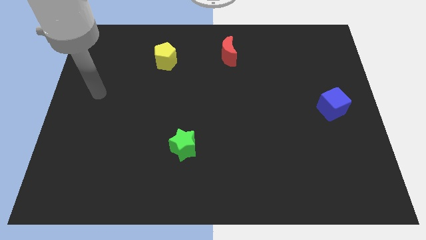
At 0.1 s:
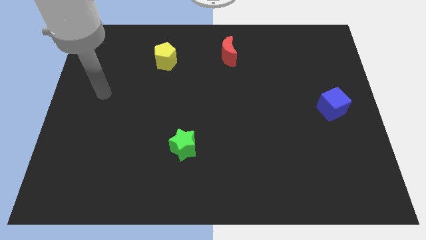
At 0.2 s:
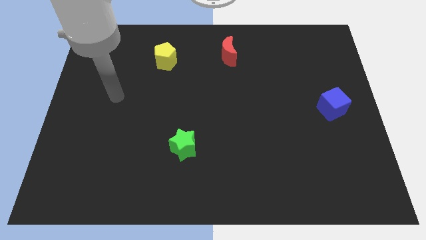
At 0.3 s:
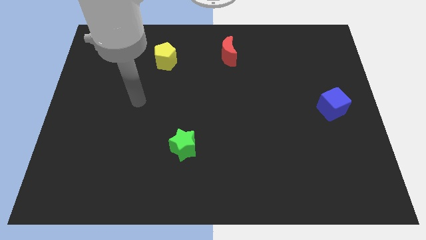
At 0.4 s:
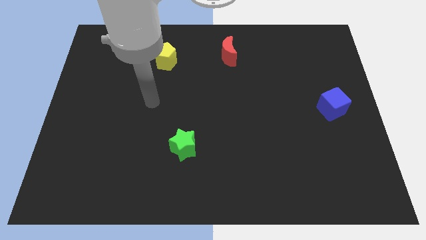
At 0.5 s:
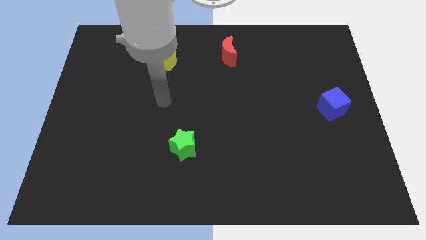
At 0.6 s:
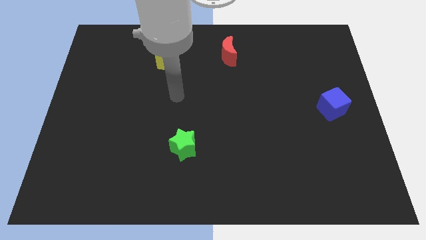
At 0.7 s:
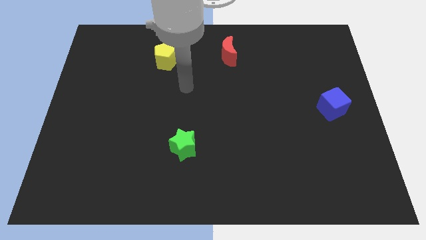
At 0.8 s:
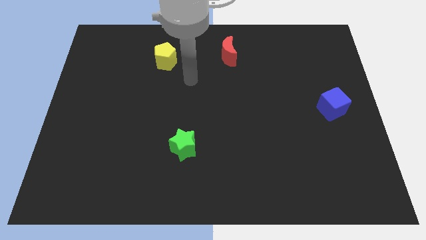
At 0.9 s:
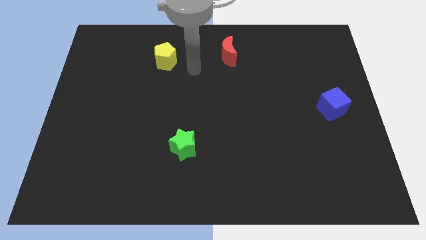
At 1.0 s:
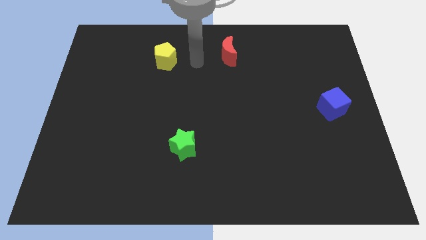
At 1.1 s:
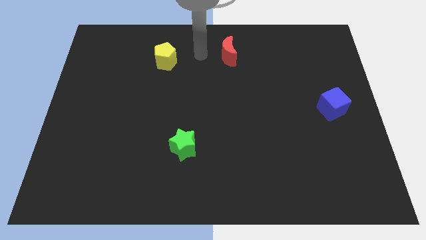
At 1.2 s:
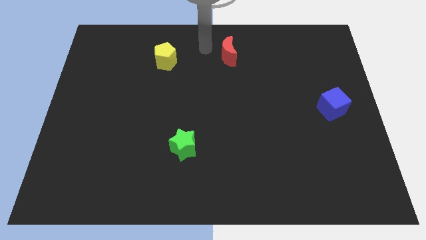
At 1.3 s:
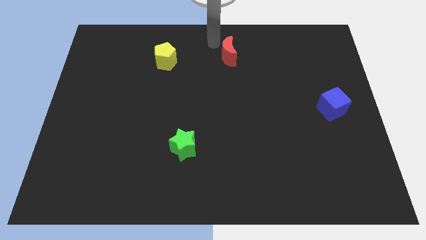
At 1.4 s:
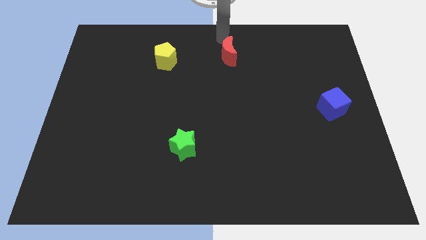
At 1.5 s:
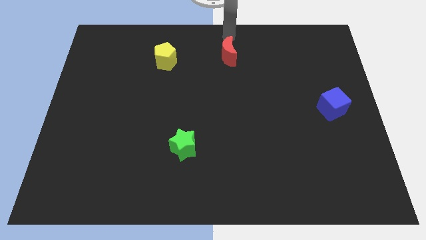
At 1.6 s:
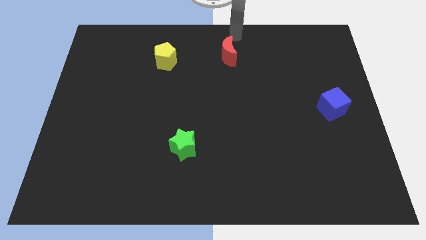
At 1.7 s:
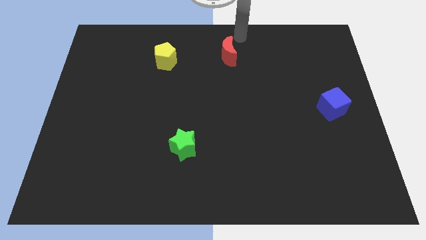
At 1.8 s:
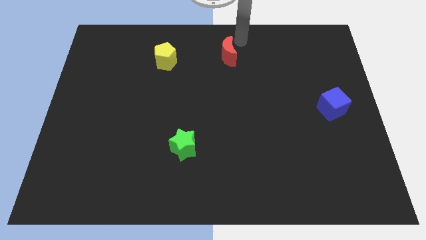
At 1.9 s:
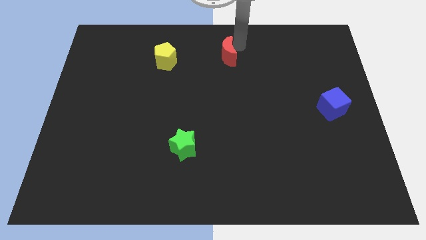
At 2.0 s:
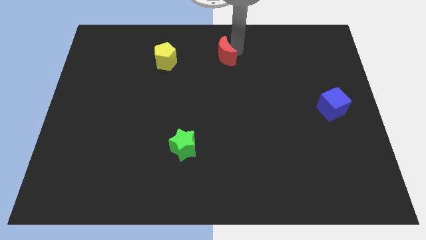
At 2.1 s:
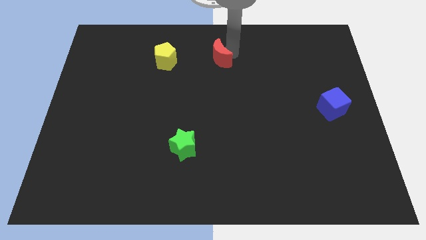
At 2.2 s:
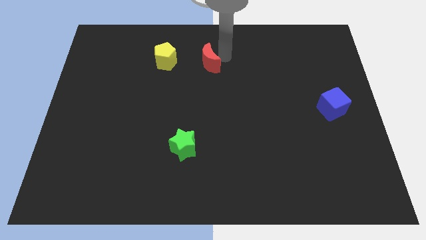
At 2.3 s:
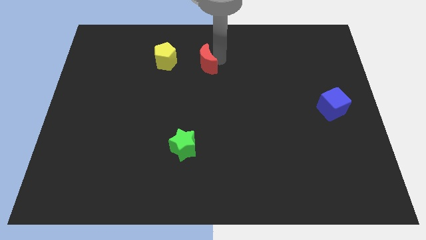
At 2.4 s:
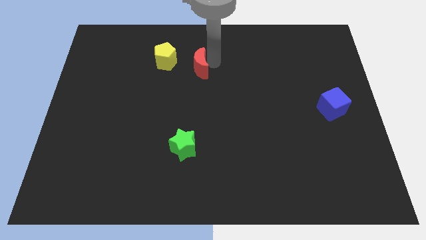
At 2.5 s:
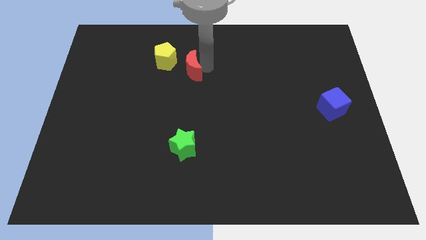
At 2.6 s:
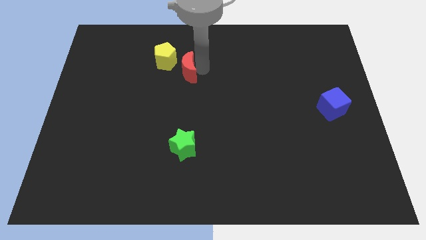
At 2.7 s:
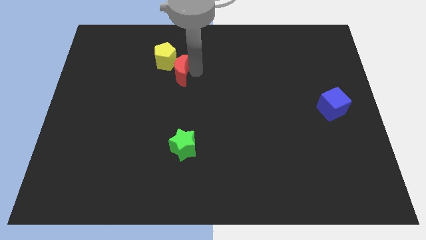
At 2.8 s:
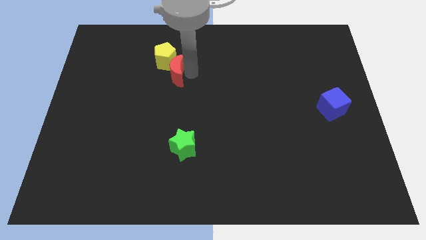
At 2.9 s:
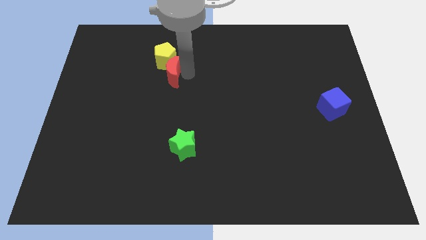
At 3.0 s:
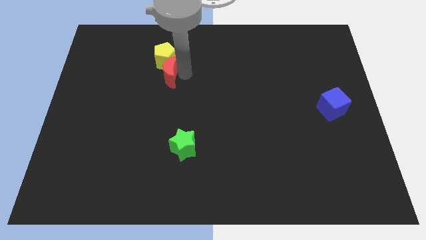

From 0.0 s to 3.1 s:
push the moon to the pentagon

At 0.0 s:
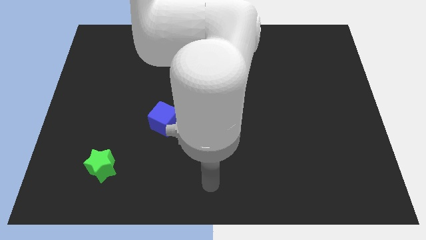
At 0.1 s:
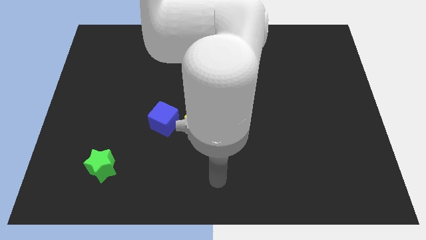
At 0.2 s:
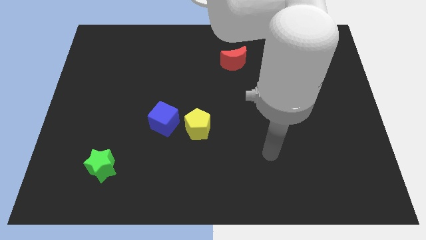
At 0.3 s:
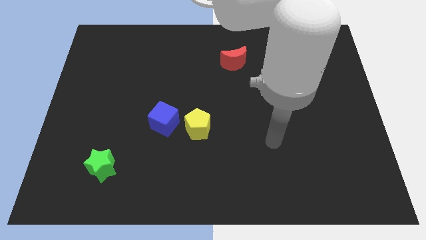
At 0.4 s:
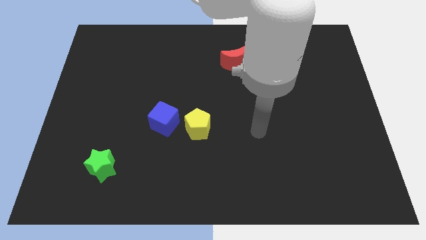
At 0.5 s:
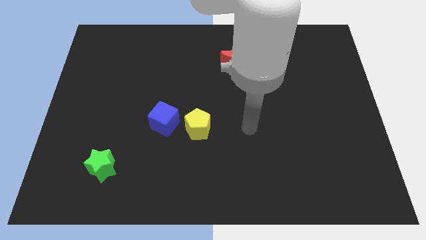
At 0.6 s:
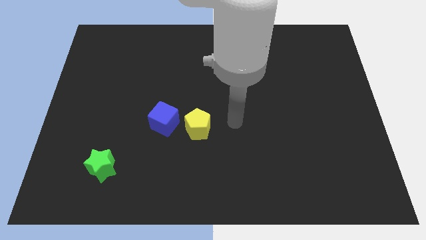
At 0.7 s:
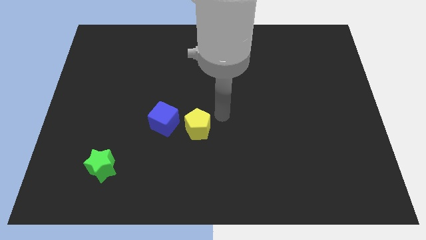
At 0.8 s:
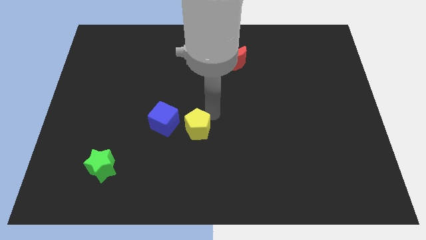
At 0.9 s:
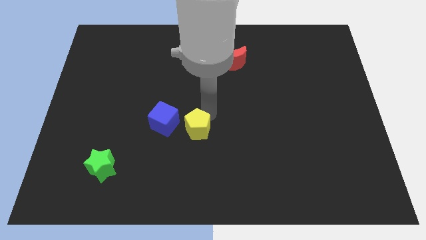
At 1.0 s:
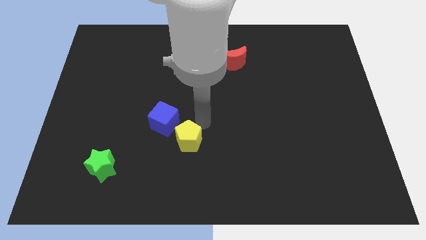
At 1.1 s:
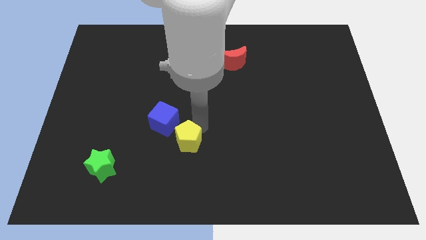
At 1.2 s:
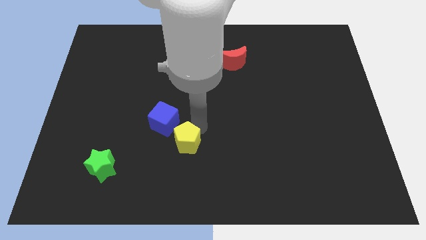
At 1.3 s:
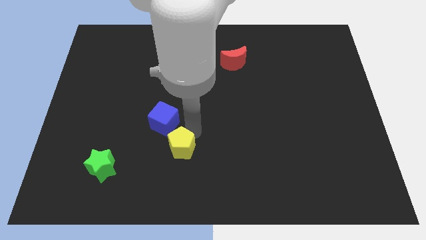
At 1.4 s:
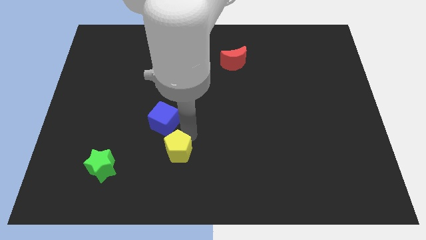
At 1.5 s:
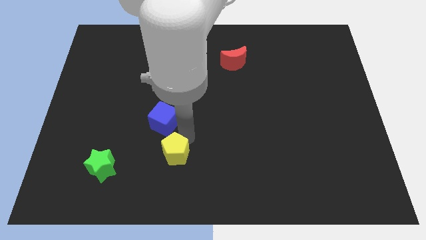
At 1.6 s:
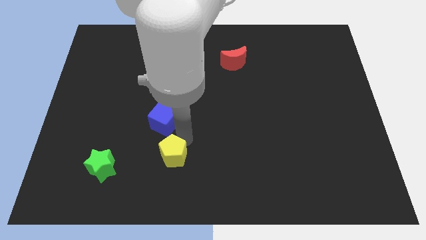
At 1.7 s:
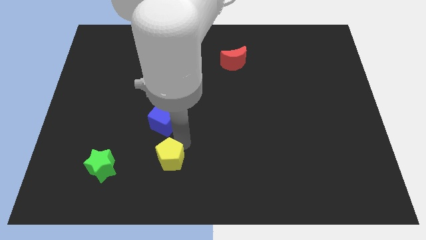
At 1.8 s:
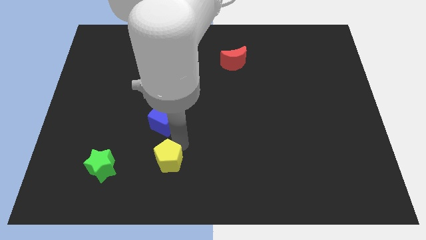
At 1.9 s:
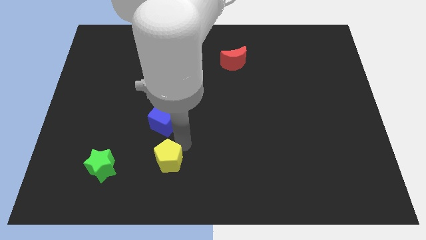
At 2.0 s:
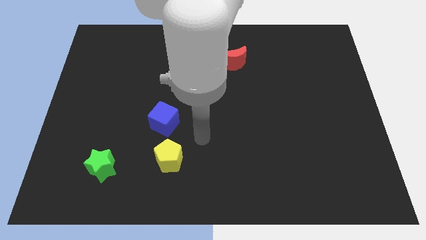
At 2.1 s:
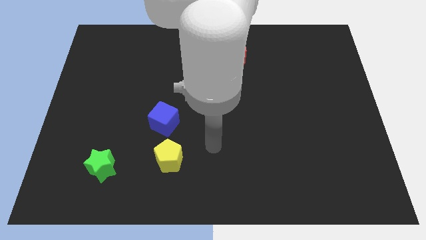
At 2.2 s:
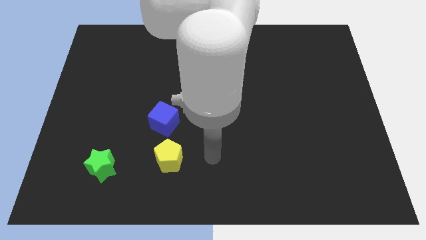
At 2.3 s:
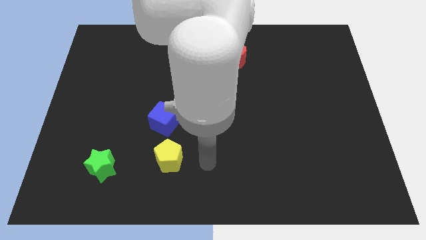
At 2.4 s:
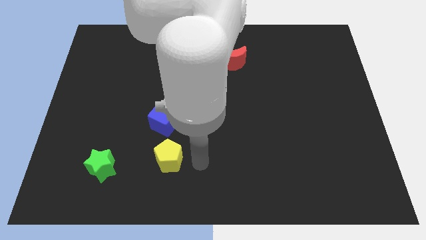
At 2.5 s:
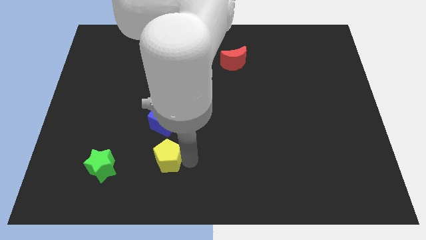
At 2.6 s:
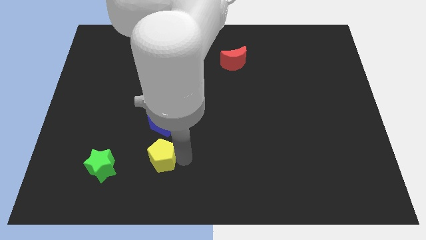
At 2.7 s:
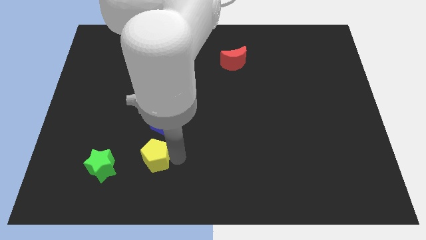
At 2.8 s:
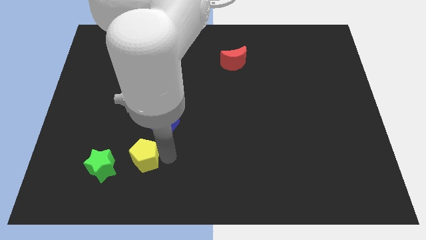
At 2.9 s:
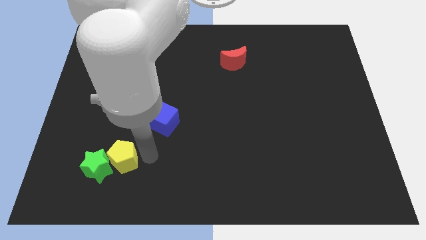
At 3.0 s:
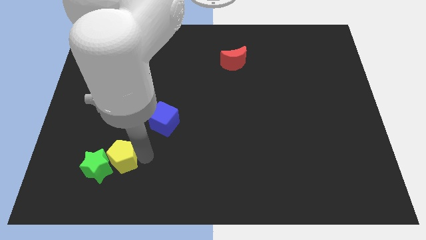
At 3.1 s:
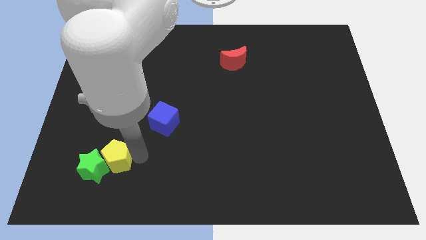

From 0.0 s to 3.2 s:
push the pentagon to the star

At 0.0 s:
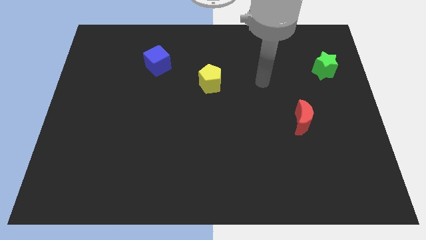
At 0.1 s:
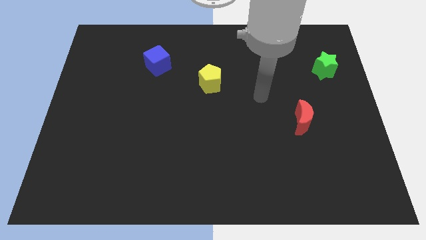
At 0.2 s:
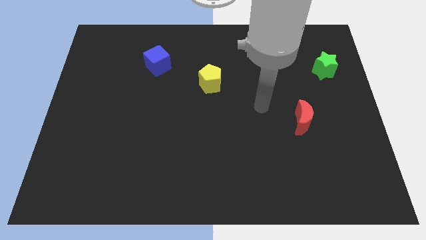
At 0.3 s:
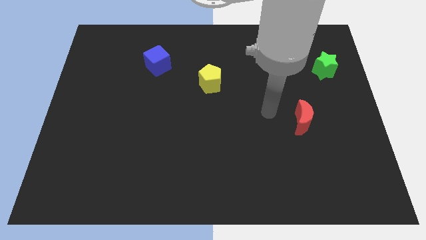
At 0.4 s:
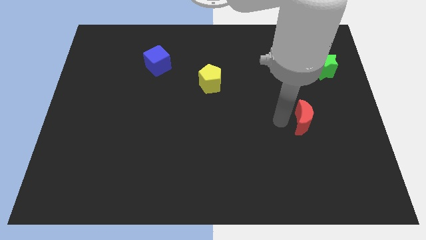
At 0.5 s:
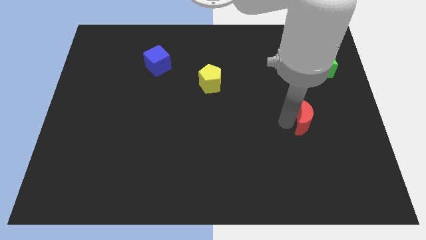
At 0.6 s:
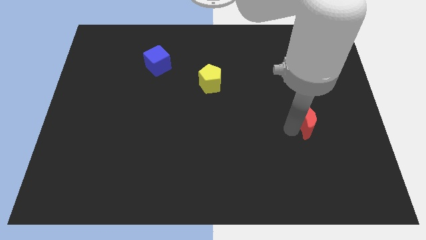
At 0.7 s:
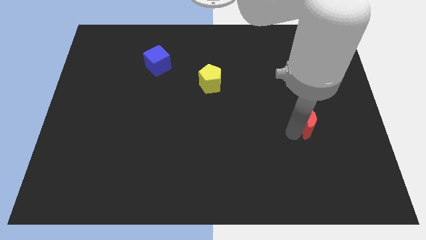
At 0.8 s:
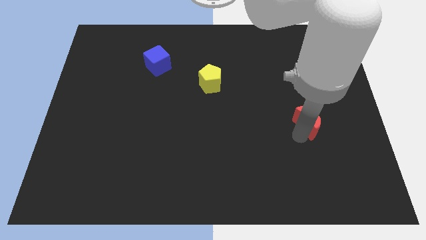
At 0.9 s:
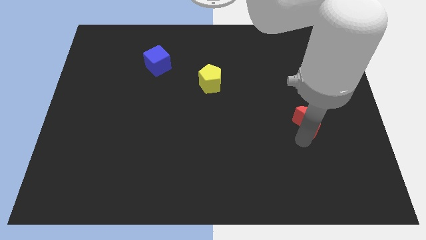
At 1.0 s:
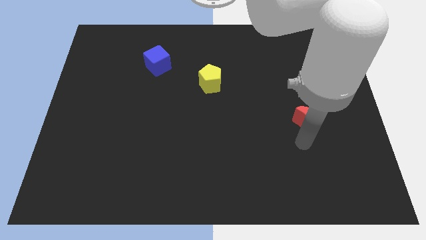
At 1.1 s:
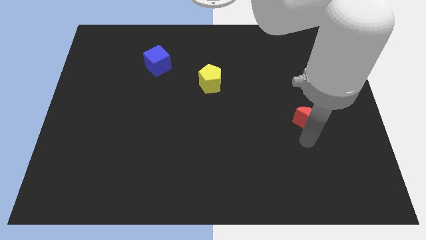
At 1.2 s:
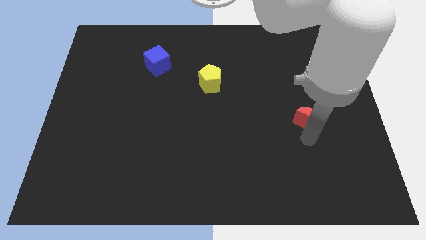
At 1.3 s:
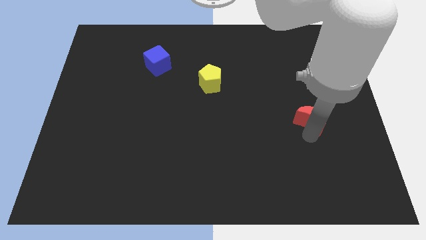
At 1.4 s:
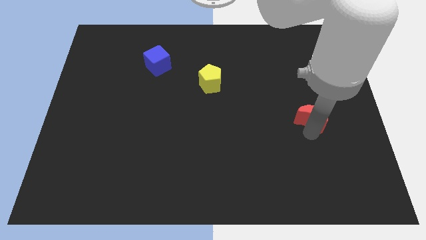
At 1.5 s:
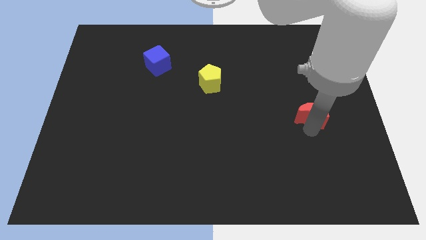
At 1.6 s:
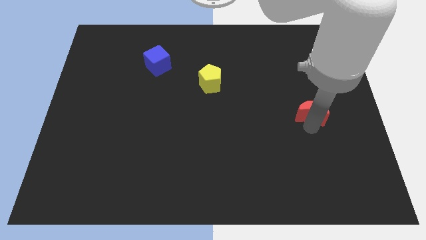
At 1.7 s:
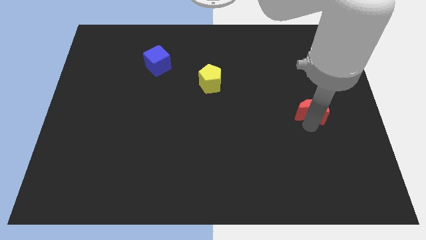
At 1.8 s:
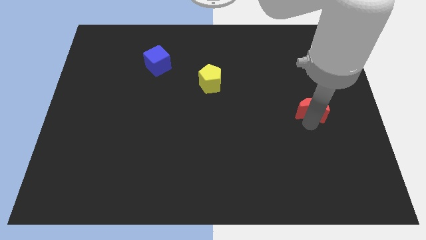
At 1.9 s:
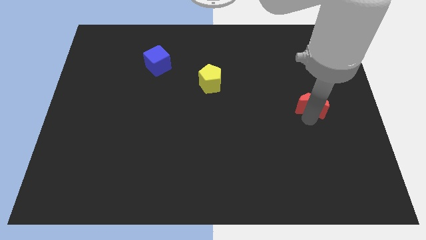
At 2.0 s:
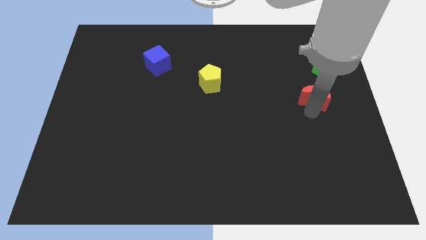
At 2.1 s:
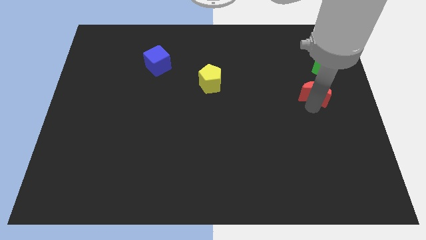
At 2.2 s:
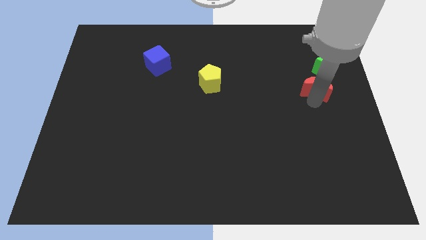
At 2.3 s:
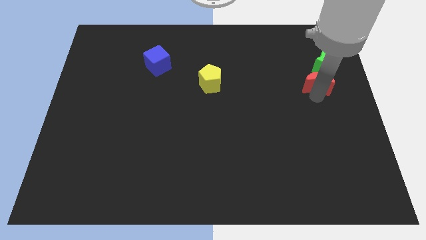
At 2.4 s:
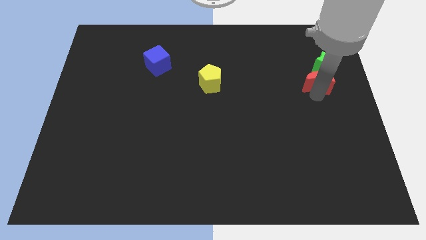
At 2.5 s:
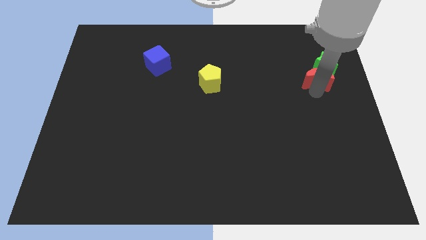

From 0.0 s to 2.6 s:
slide the moon to the star
